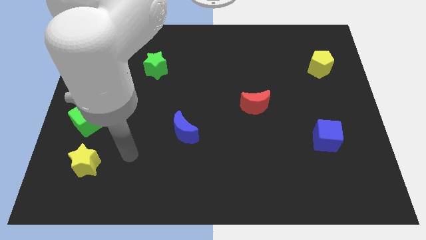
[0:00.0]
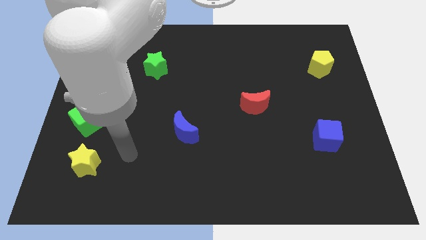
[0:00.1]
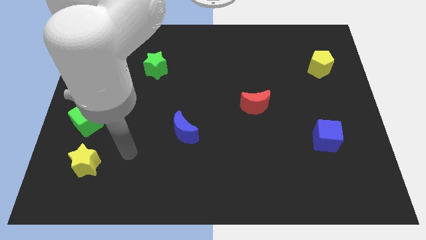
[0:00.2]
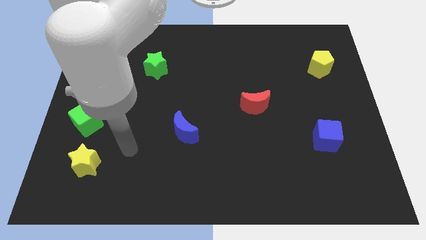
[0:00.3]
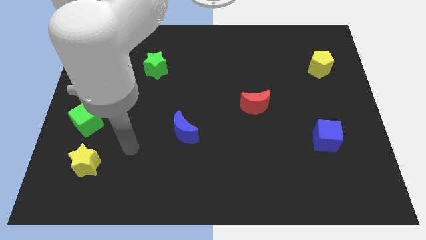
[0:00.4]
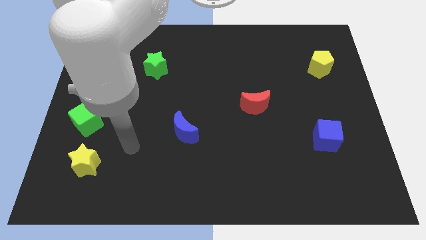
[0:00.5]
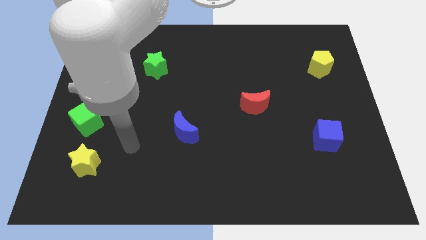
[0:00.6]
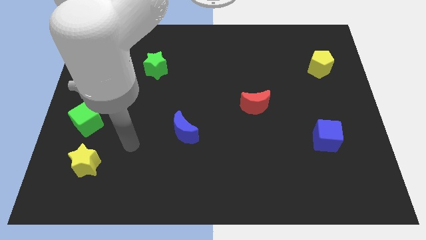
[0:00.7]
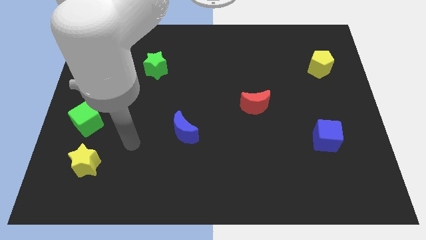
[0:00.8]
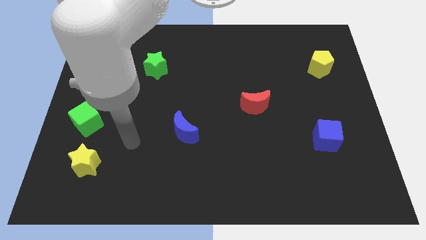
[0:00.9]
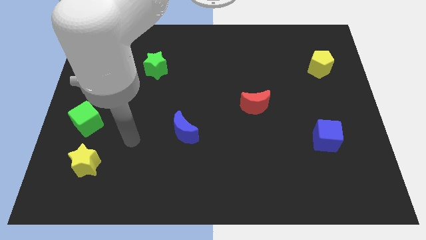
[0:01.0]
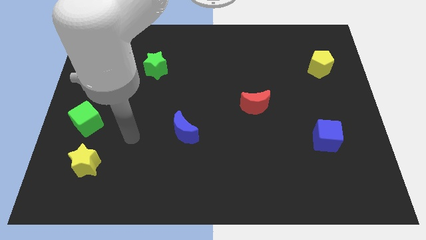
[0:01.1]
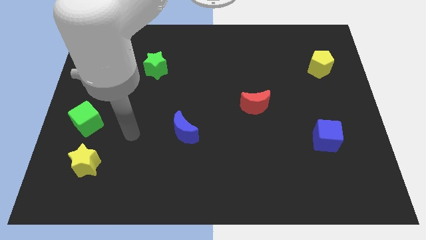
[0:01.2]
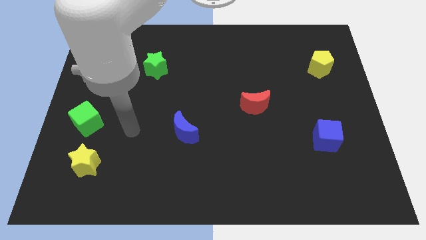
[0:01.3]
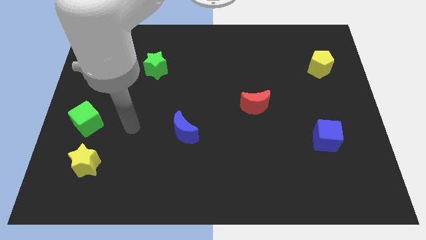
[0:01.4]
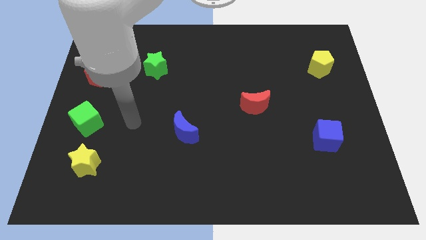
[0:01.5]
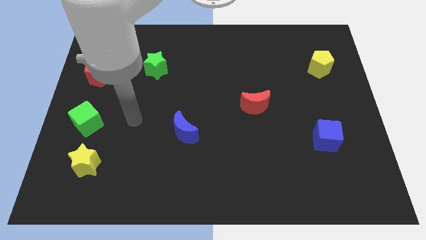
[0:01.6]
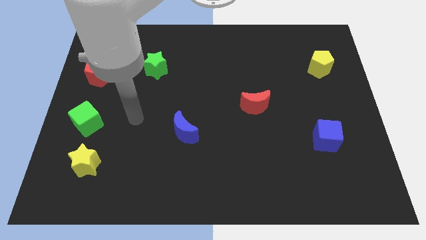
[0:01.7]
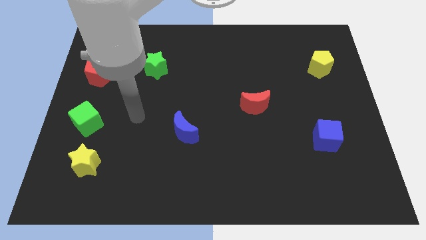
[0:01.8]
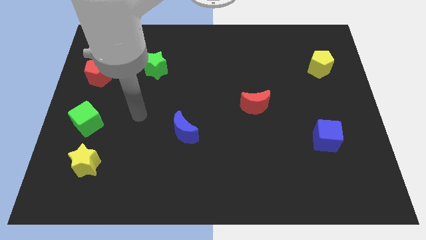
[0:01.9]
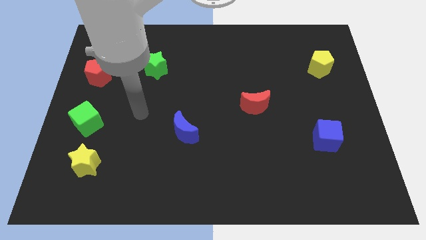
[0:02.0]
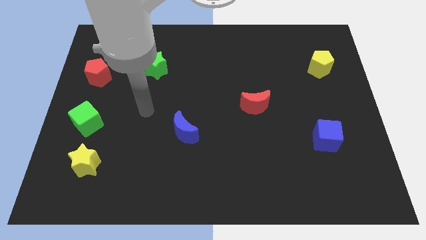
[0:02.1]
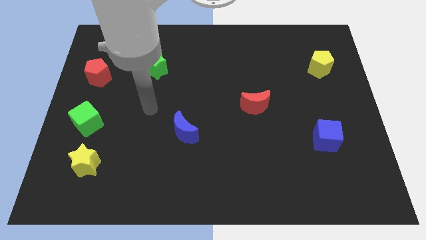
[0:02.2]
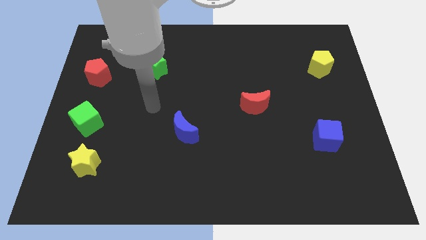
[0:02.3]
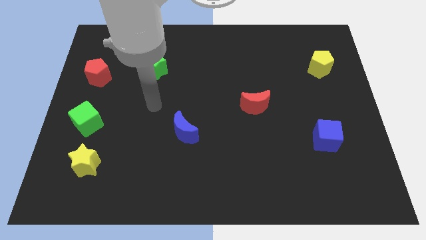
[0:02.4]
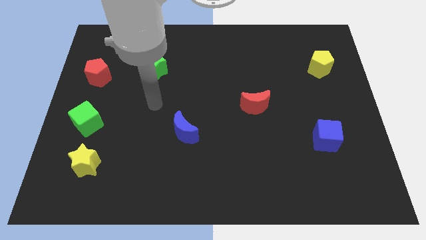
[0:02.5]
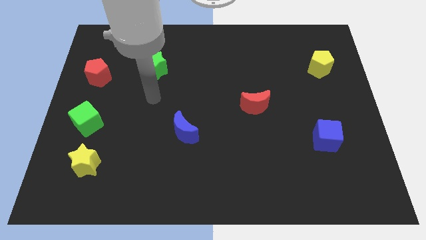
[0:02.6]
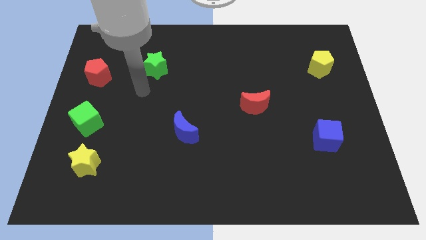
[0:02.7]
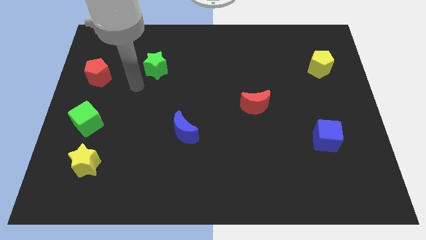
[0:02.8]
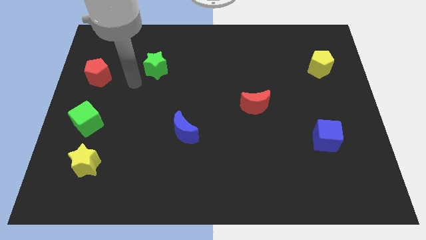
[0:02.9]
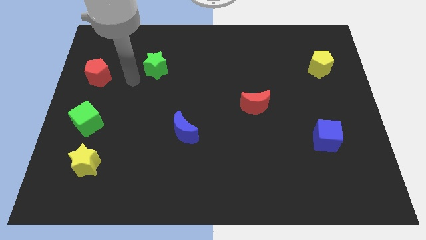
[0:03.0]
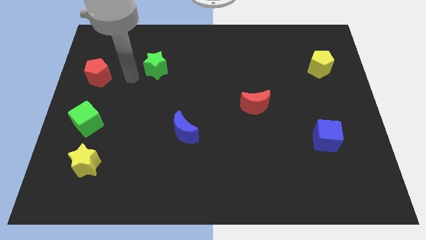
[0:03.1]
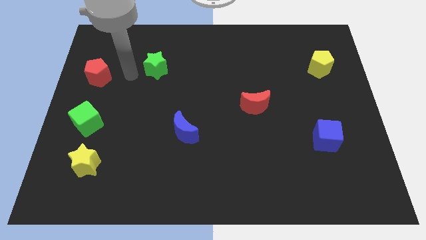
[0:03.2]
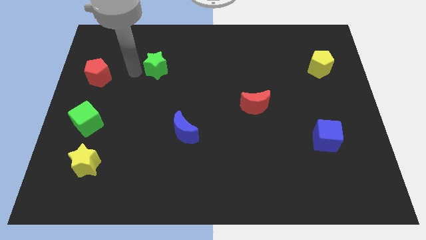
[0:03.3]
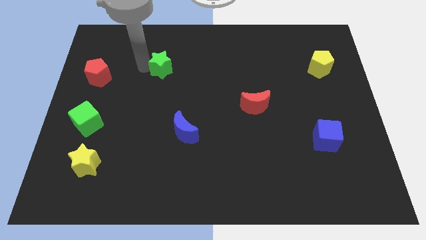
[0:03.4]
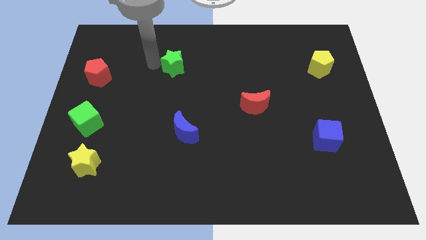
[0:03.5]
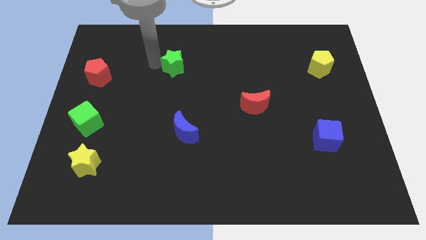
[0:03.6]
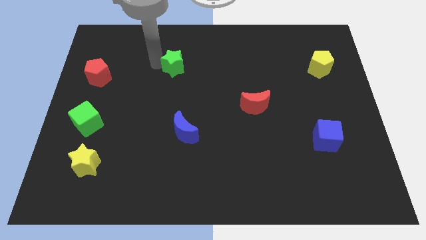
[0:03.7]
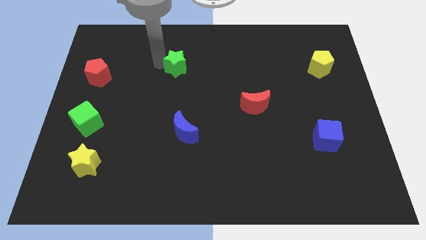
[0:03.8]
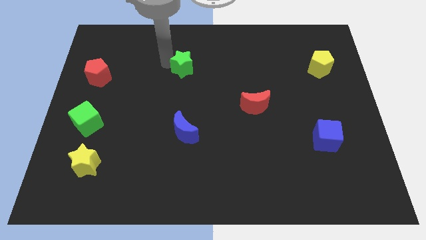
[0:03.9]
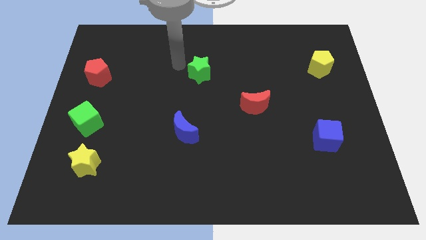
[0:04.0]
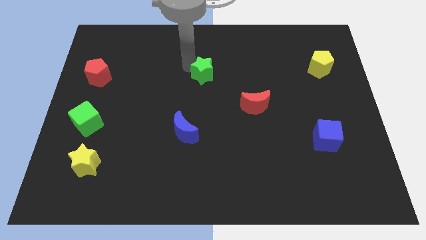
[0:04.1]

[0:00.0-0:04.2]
move the green star towards the center of the board

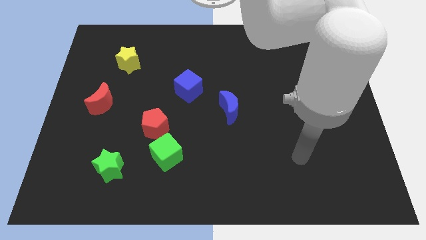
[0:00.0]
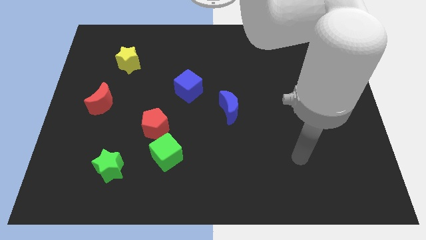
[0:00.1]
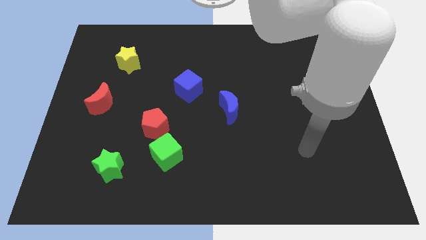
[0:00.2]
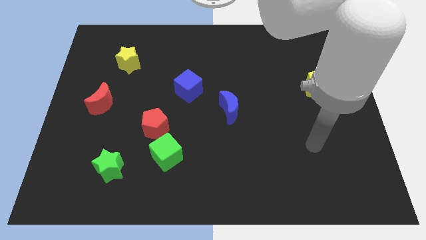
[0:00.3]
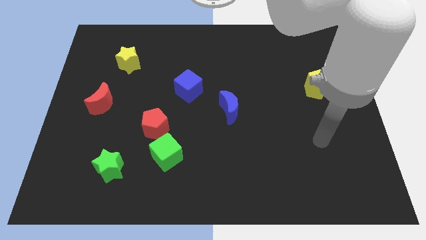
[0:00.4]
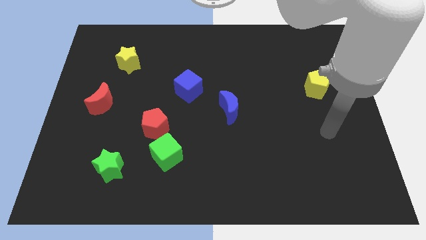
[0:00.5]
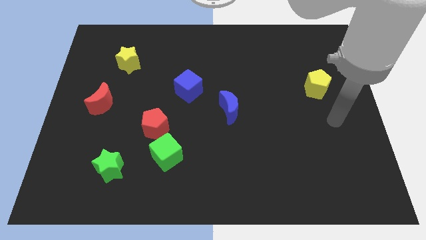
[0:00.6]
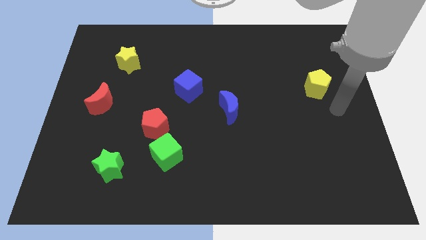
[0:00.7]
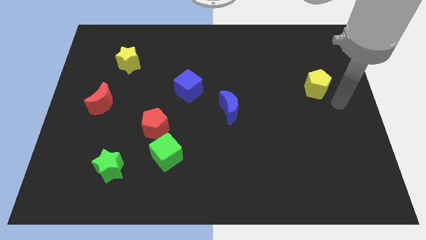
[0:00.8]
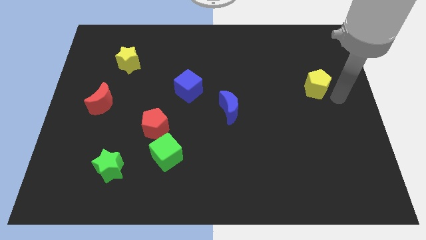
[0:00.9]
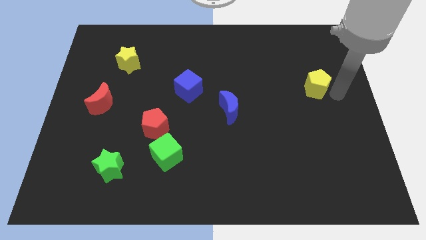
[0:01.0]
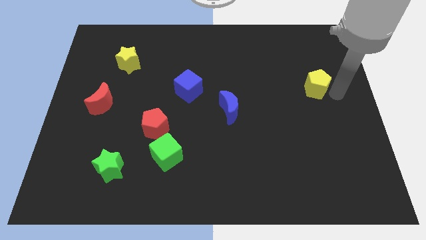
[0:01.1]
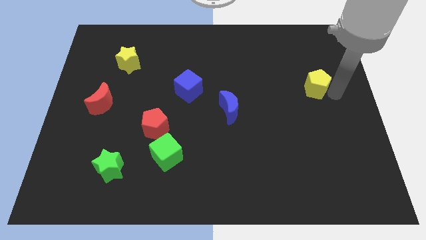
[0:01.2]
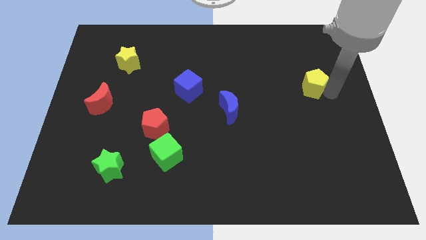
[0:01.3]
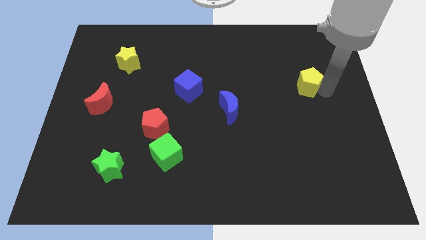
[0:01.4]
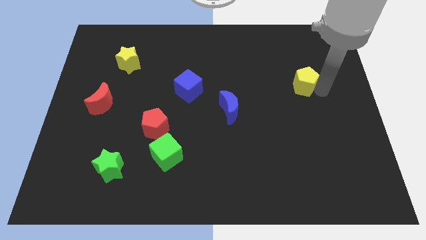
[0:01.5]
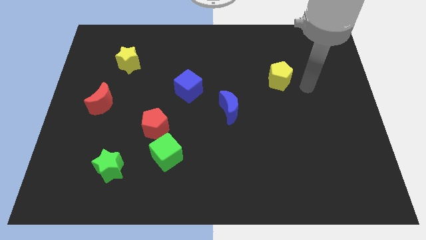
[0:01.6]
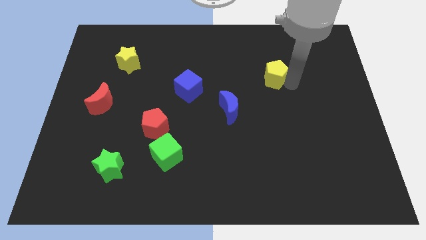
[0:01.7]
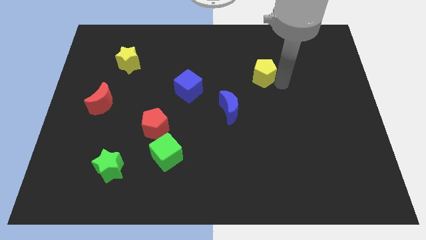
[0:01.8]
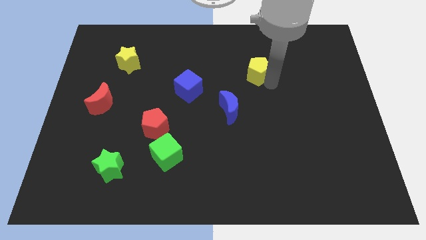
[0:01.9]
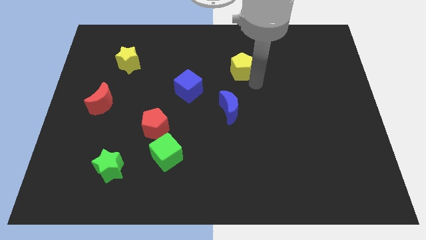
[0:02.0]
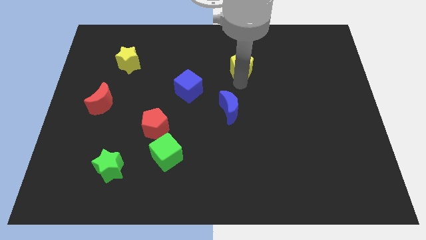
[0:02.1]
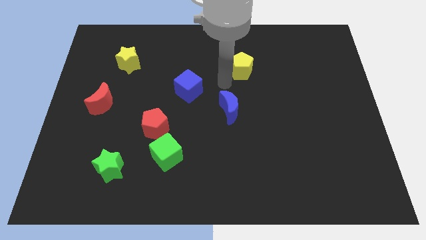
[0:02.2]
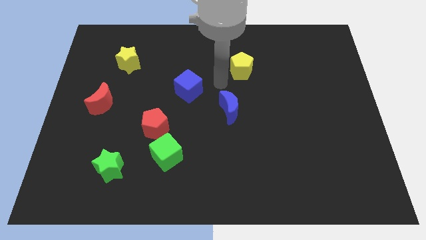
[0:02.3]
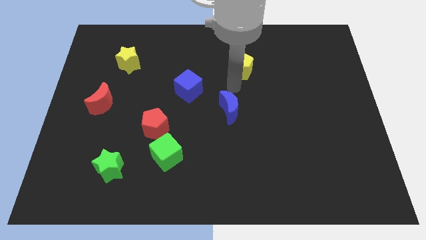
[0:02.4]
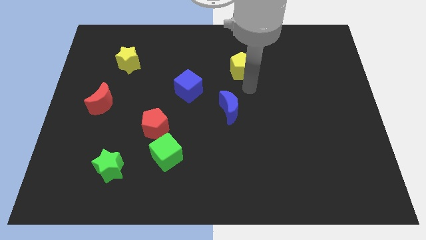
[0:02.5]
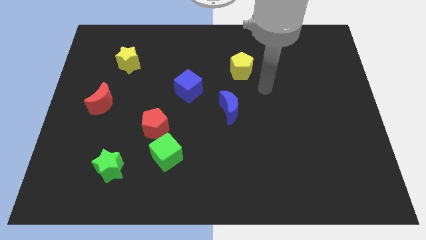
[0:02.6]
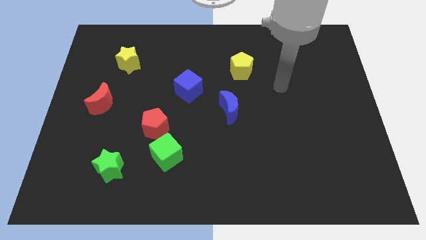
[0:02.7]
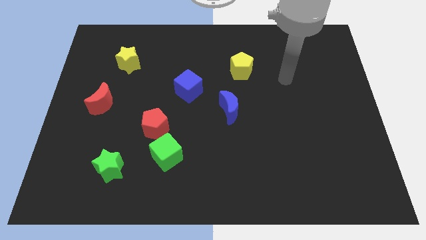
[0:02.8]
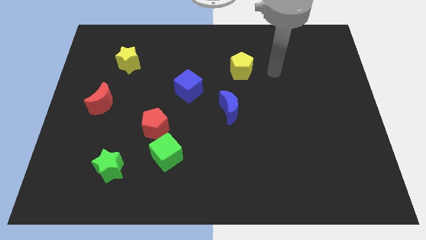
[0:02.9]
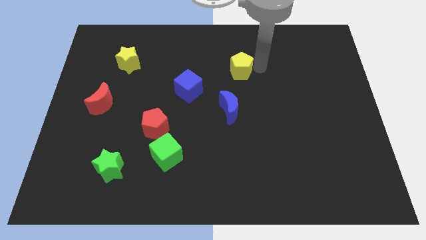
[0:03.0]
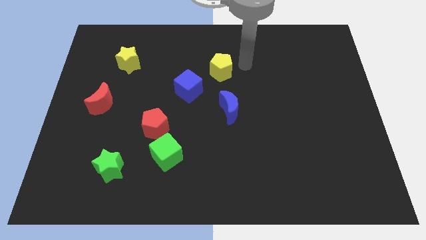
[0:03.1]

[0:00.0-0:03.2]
move the yellow pentagon diagonally to the top left side of the blue crescent

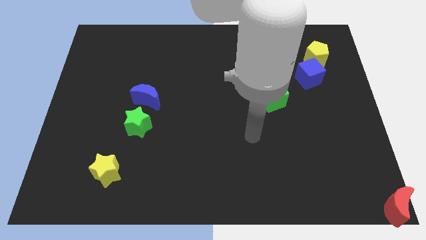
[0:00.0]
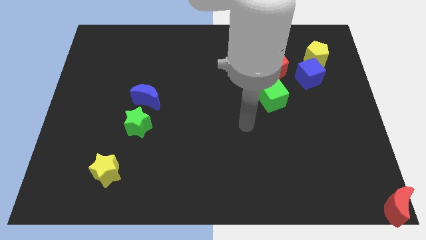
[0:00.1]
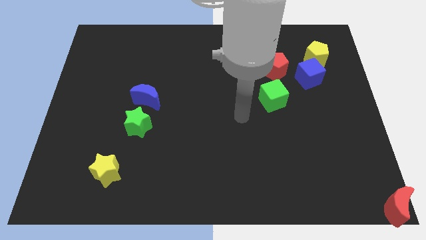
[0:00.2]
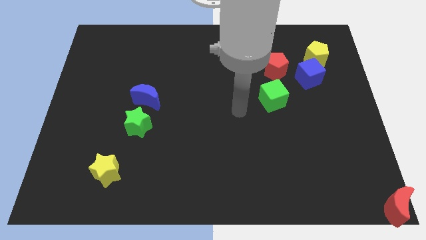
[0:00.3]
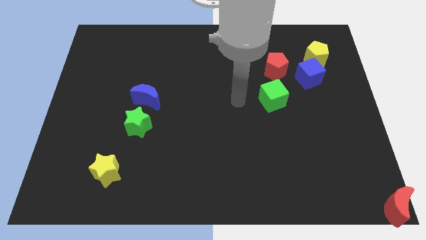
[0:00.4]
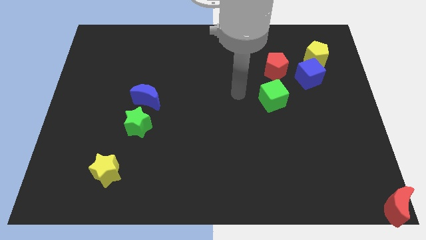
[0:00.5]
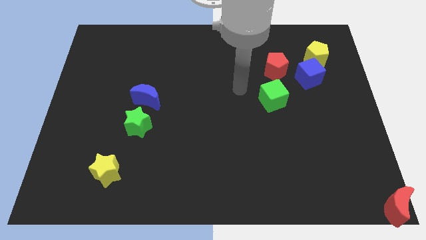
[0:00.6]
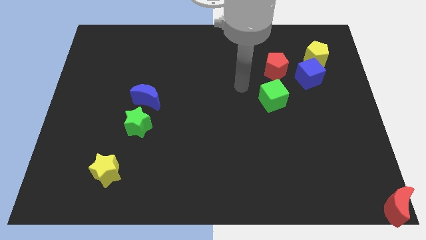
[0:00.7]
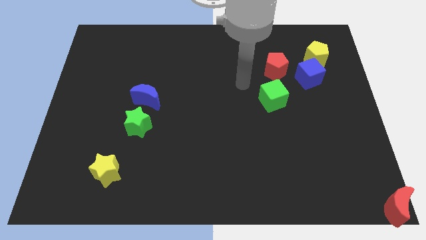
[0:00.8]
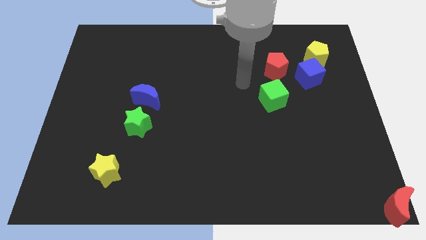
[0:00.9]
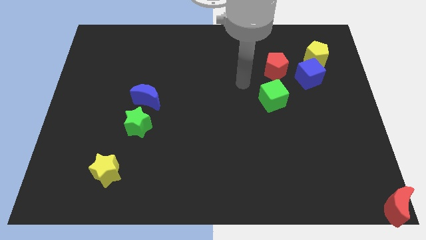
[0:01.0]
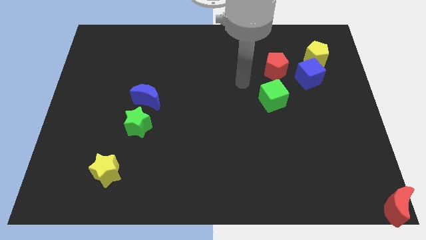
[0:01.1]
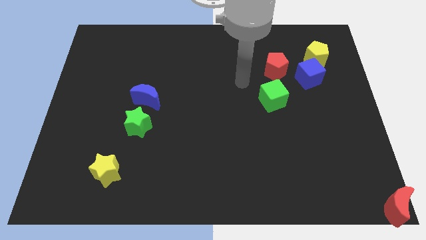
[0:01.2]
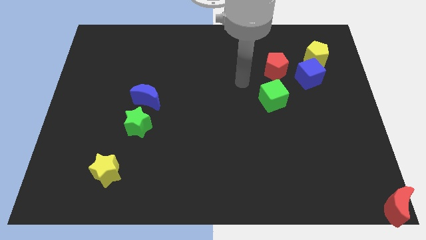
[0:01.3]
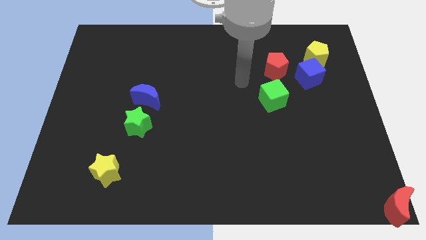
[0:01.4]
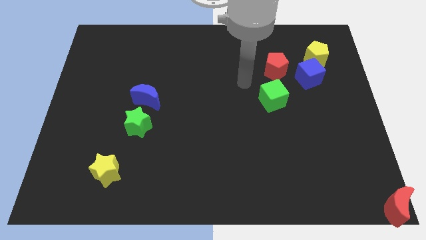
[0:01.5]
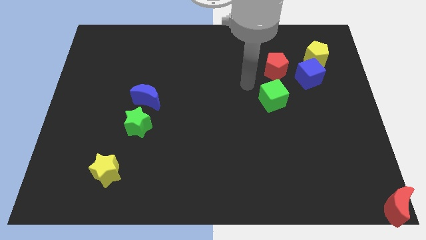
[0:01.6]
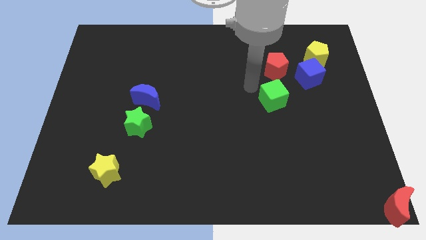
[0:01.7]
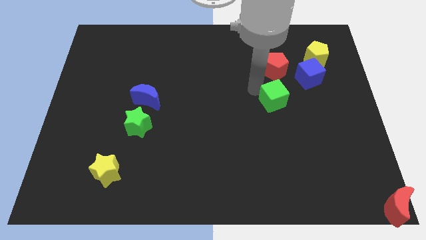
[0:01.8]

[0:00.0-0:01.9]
drag the arm to the top of the green cube
